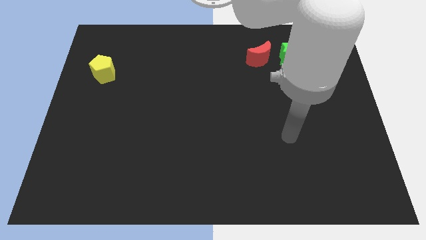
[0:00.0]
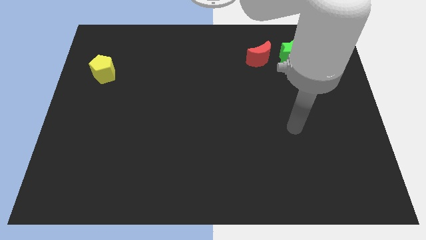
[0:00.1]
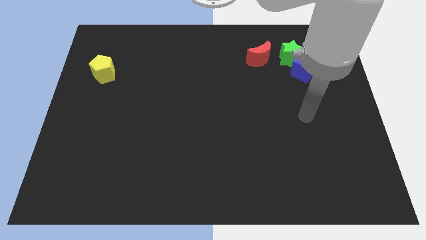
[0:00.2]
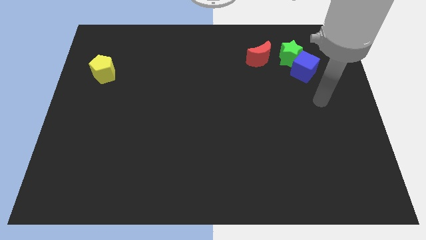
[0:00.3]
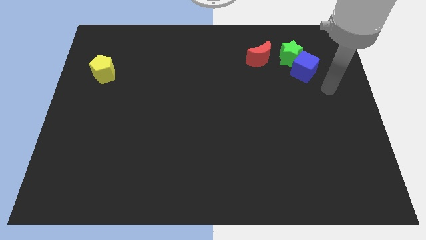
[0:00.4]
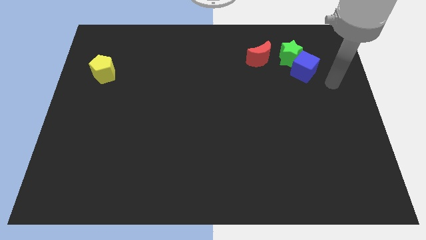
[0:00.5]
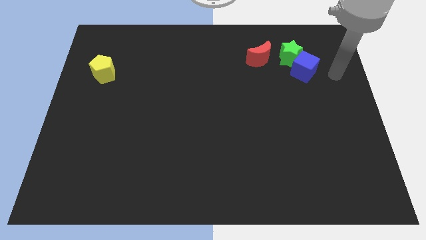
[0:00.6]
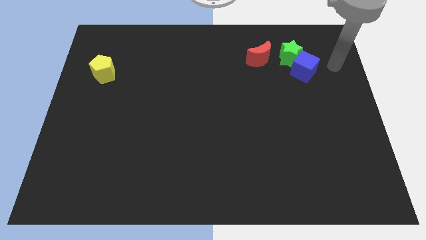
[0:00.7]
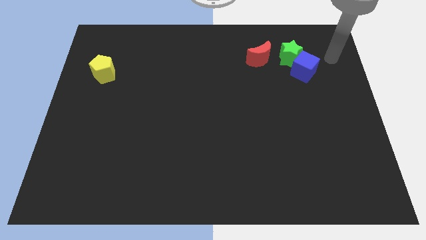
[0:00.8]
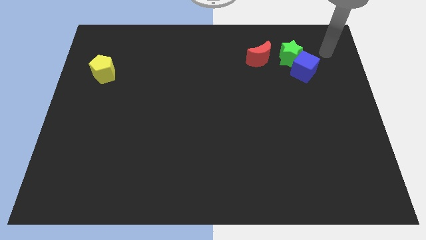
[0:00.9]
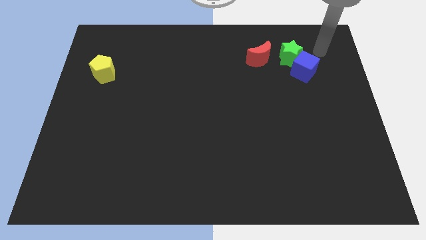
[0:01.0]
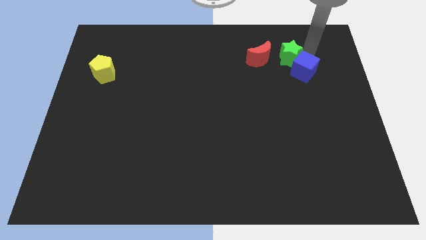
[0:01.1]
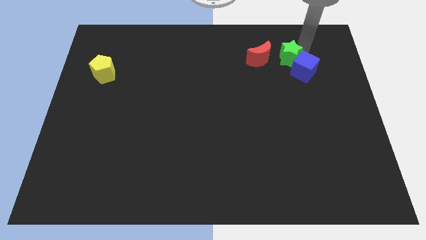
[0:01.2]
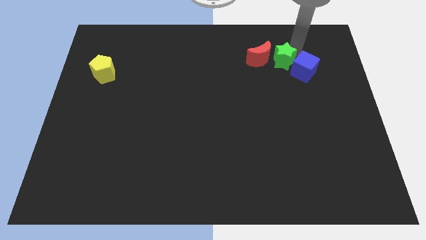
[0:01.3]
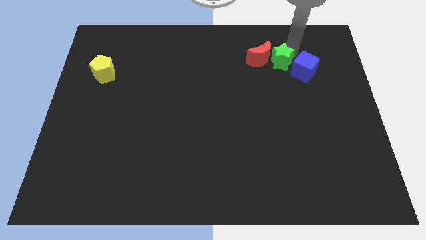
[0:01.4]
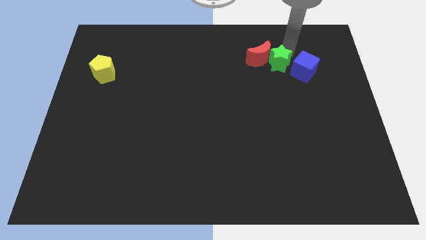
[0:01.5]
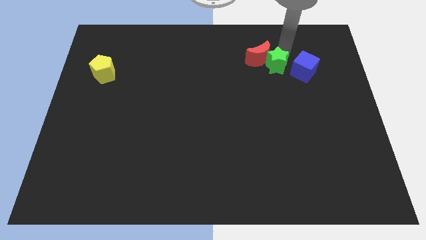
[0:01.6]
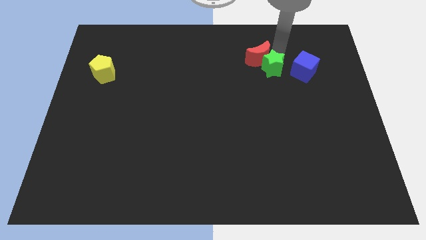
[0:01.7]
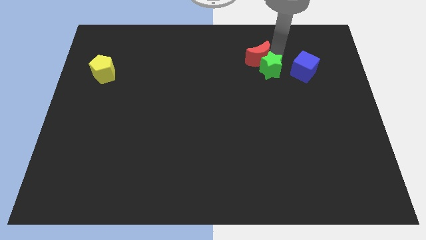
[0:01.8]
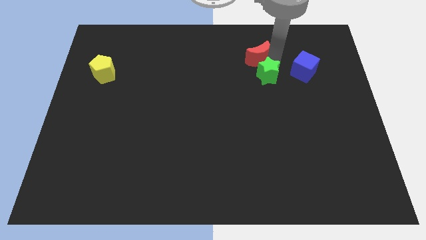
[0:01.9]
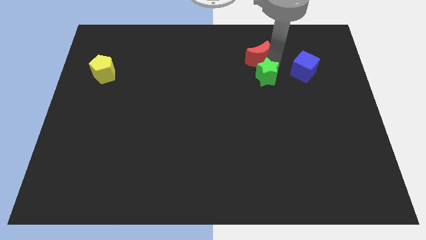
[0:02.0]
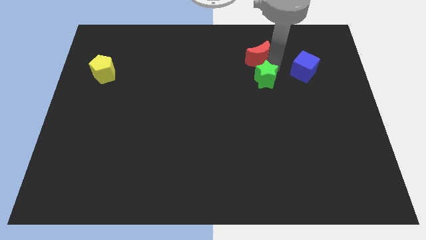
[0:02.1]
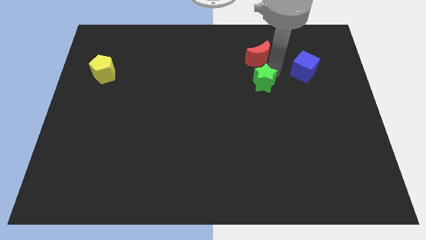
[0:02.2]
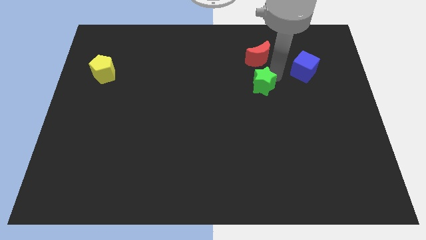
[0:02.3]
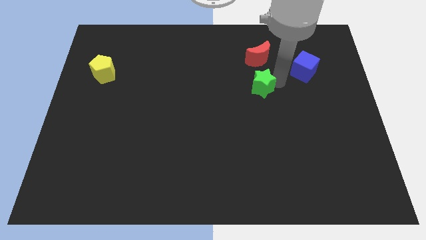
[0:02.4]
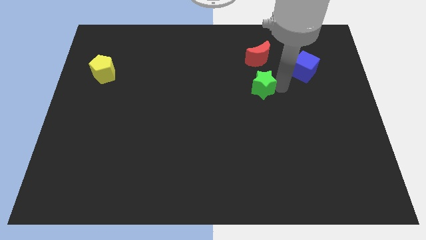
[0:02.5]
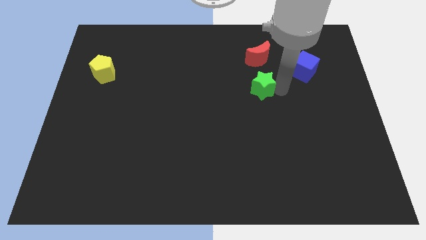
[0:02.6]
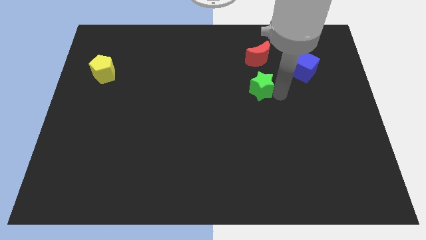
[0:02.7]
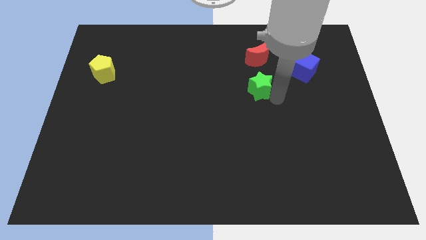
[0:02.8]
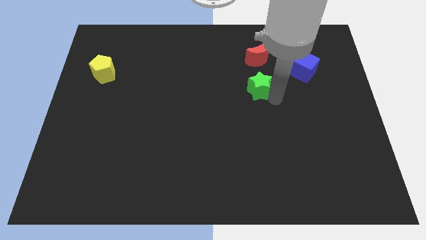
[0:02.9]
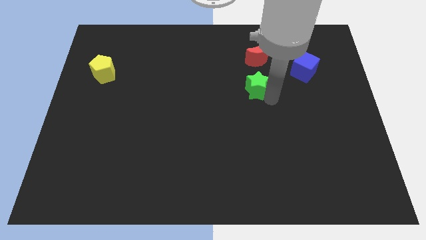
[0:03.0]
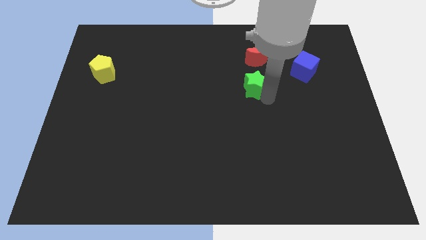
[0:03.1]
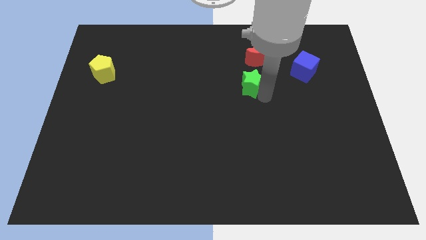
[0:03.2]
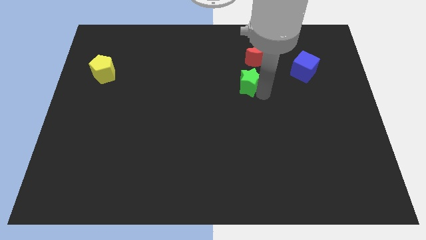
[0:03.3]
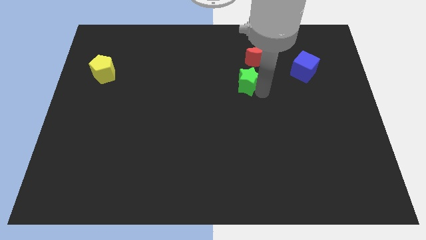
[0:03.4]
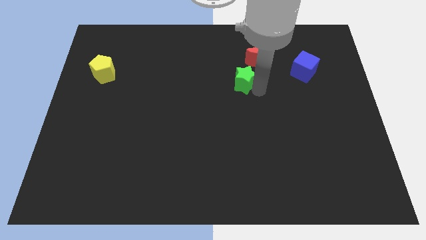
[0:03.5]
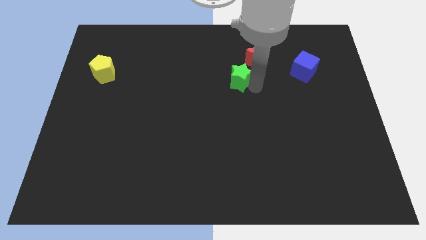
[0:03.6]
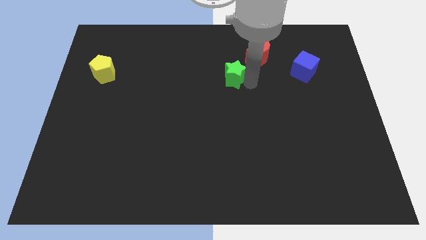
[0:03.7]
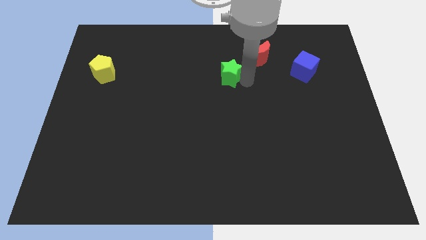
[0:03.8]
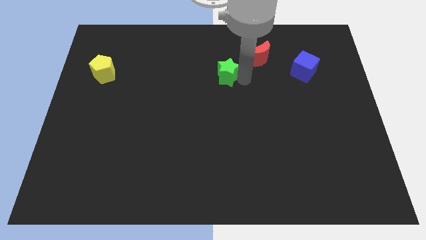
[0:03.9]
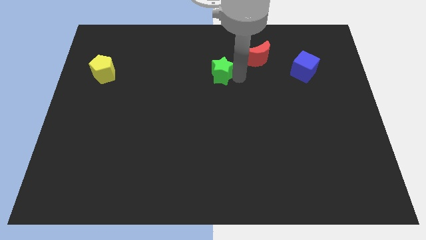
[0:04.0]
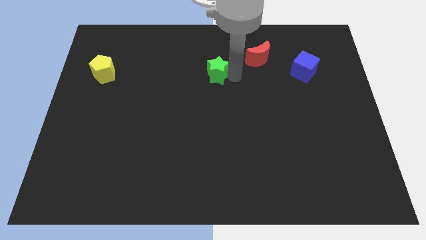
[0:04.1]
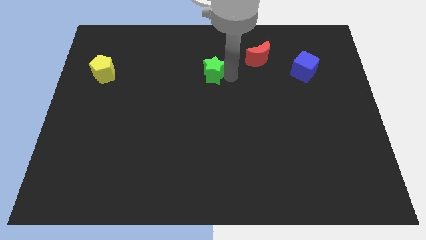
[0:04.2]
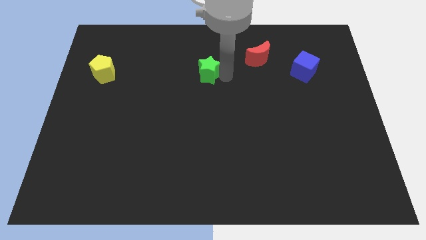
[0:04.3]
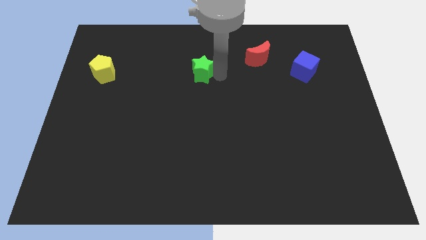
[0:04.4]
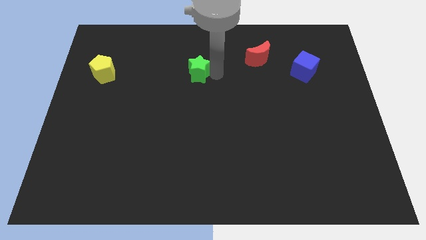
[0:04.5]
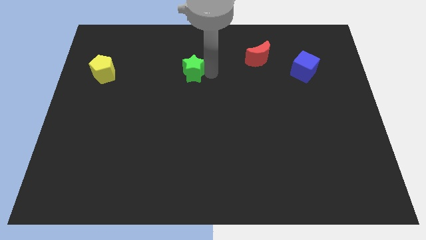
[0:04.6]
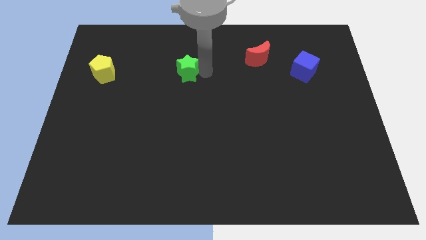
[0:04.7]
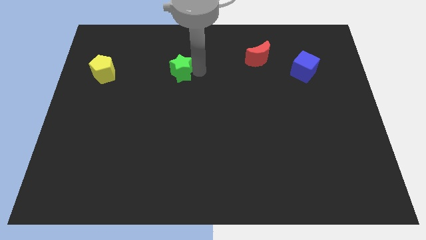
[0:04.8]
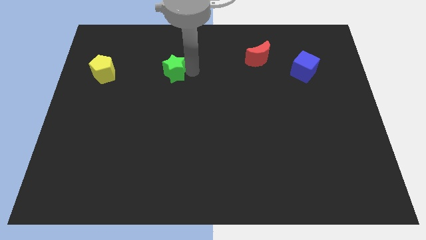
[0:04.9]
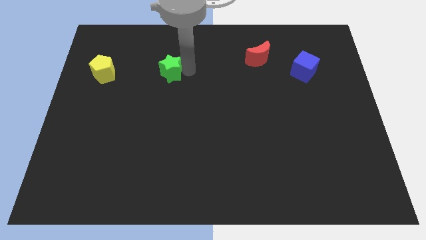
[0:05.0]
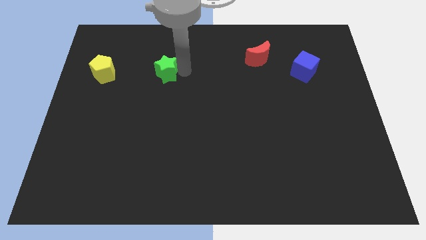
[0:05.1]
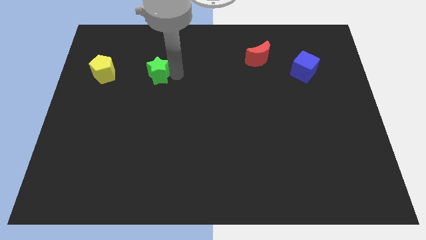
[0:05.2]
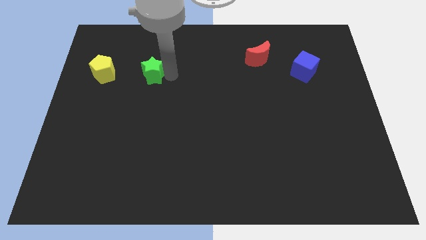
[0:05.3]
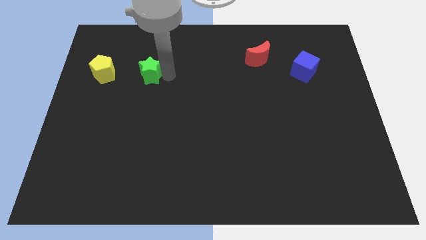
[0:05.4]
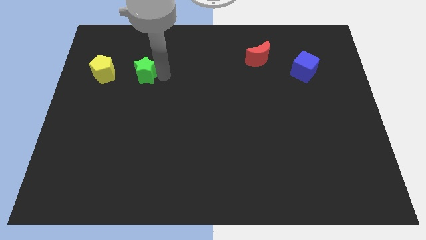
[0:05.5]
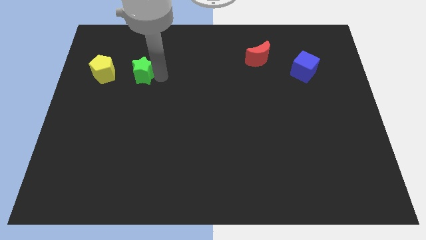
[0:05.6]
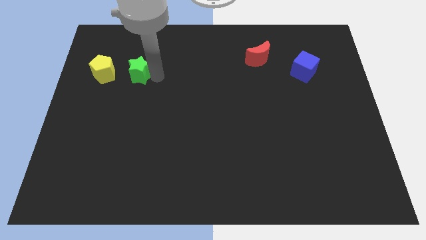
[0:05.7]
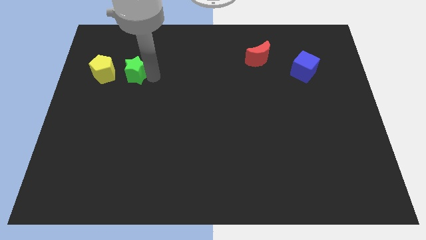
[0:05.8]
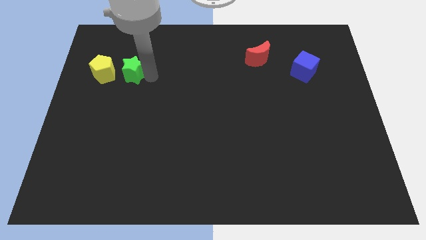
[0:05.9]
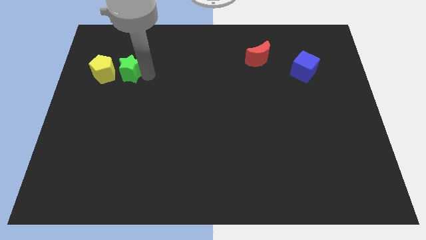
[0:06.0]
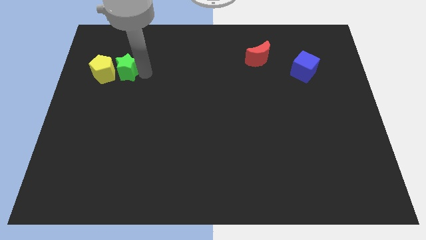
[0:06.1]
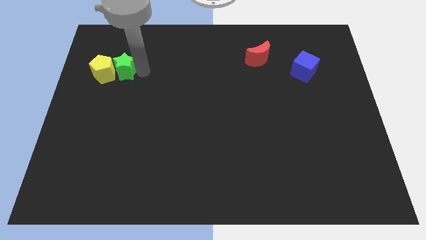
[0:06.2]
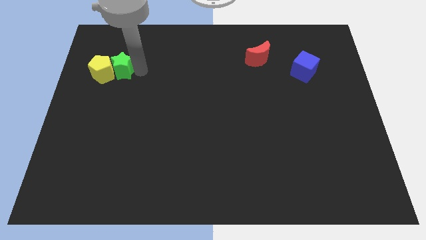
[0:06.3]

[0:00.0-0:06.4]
slide the green star close to the pentagon

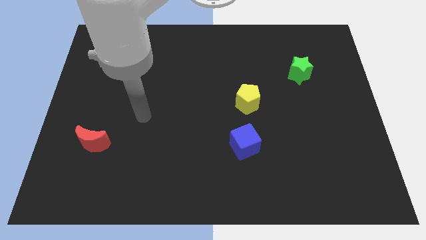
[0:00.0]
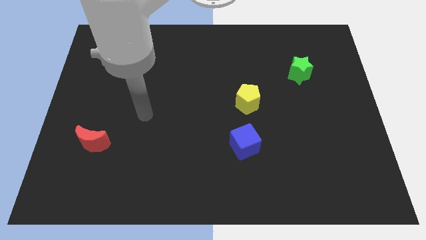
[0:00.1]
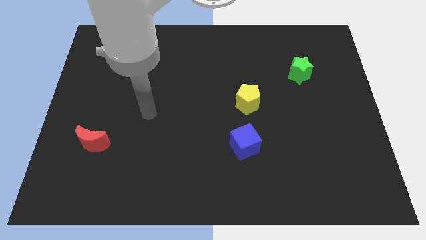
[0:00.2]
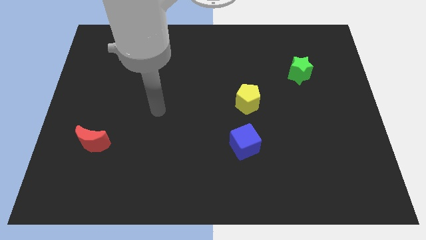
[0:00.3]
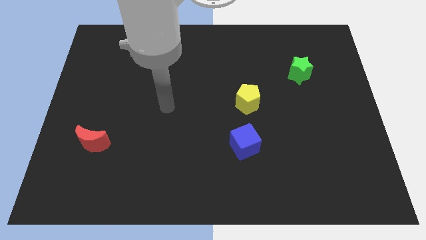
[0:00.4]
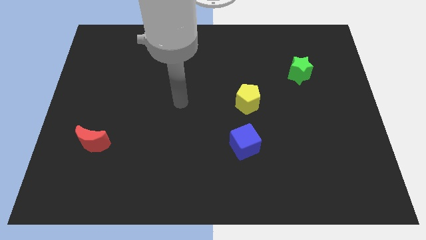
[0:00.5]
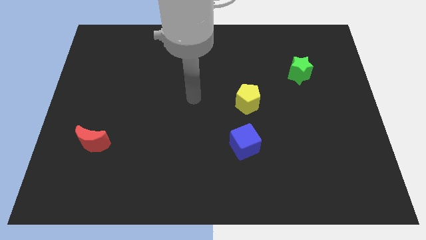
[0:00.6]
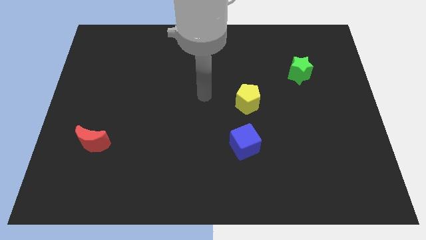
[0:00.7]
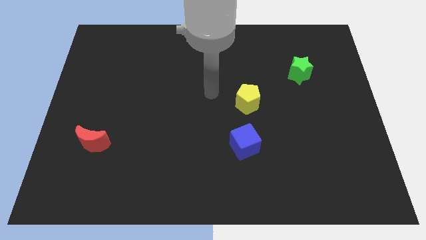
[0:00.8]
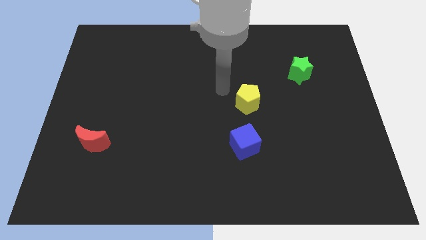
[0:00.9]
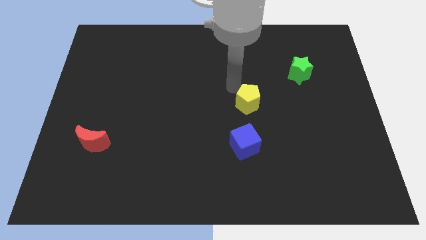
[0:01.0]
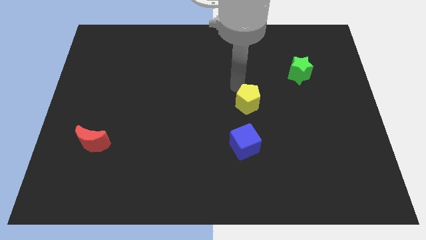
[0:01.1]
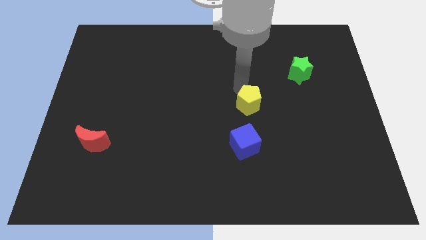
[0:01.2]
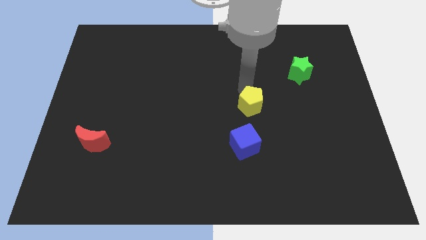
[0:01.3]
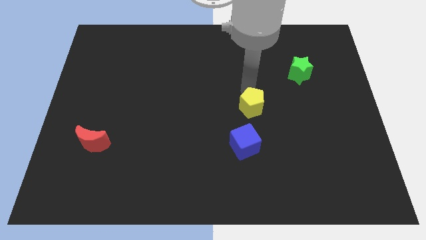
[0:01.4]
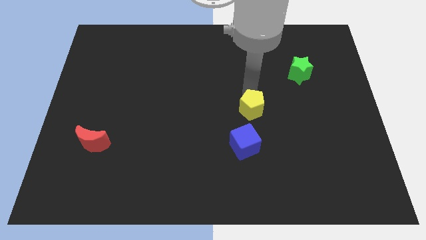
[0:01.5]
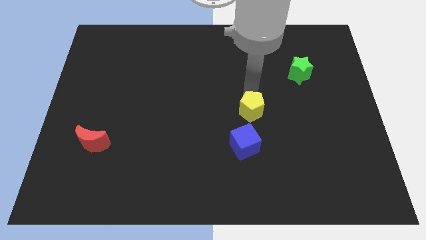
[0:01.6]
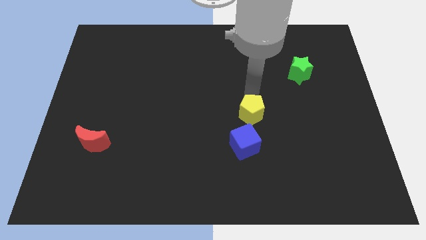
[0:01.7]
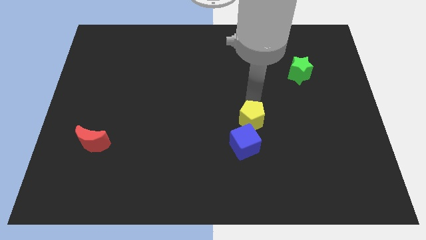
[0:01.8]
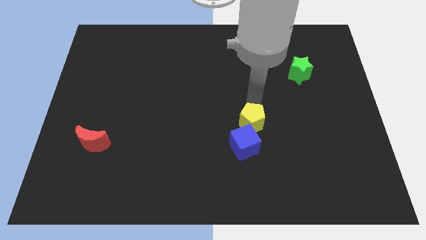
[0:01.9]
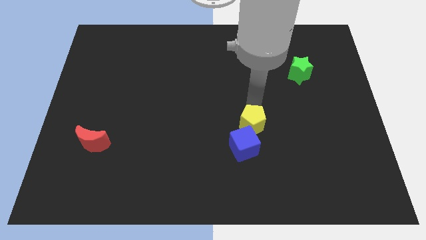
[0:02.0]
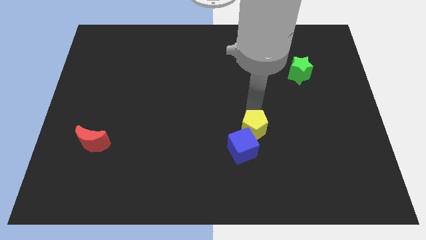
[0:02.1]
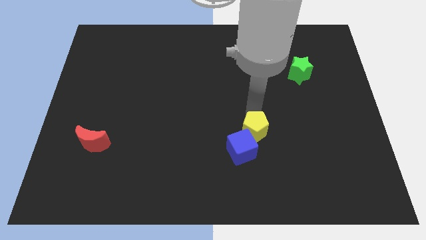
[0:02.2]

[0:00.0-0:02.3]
slide the yellow block to the blue cube
